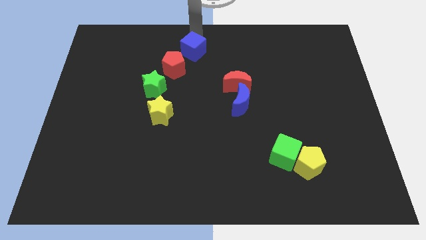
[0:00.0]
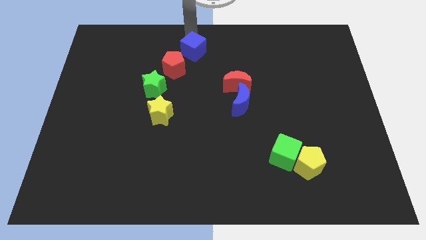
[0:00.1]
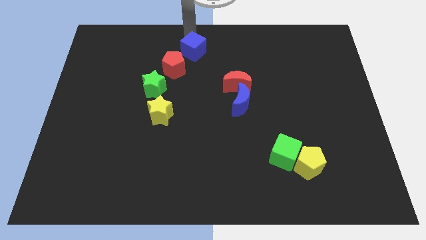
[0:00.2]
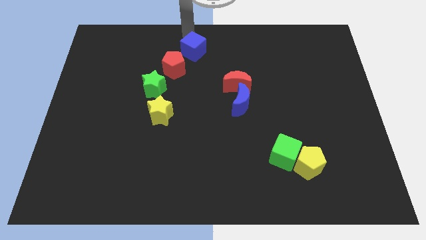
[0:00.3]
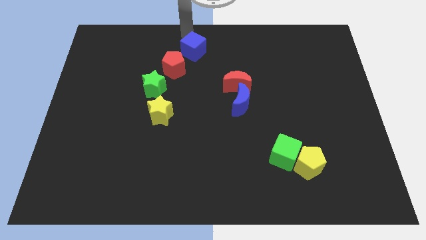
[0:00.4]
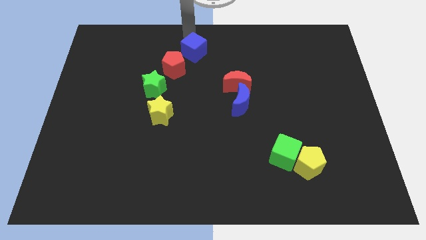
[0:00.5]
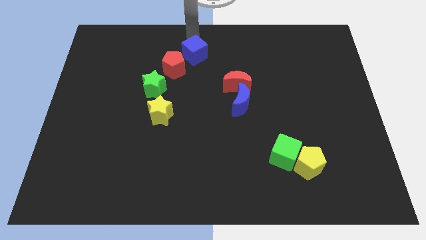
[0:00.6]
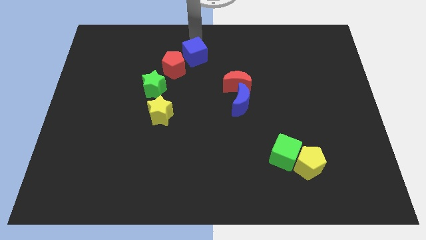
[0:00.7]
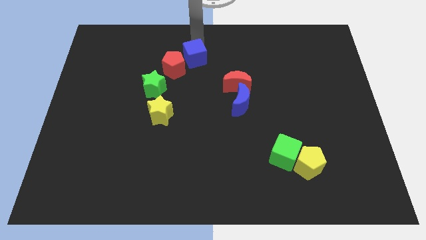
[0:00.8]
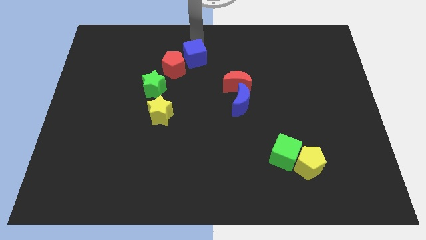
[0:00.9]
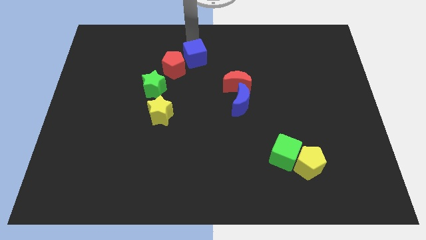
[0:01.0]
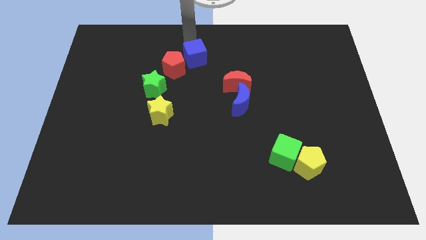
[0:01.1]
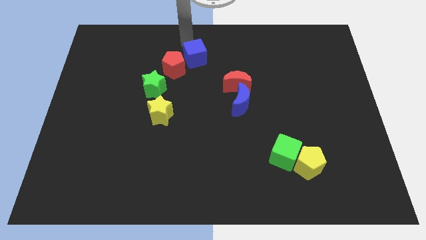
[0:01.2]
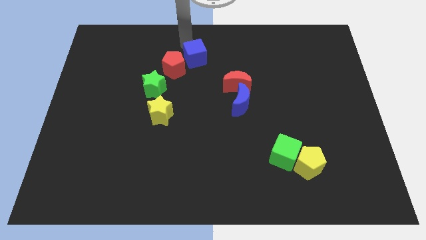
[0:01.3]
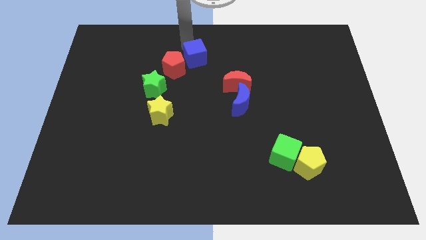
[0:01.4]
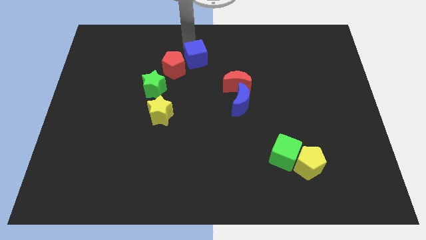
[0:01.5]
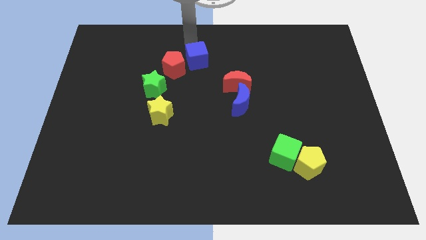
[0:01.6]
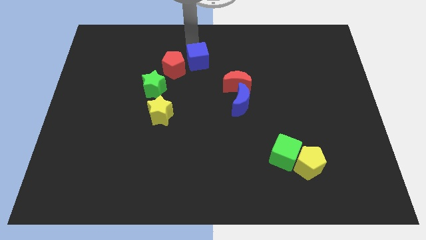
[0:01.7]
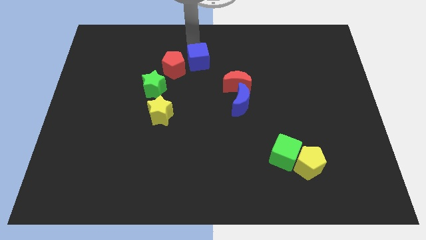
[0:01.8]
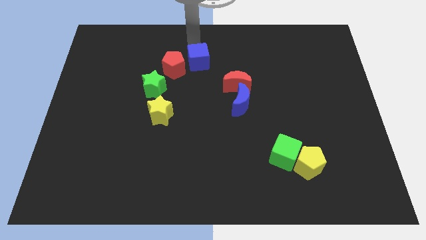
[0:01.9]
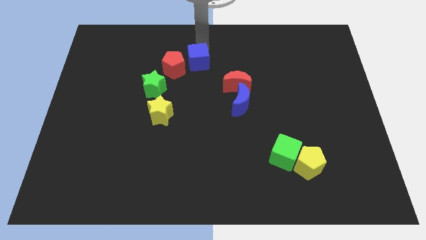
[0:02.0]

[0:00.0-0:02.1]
slightly move the blue cube to the down

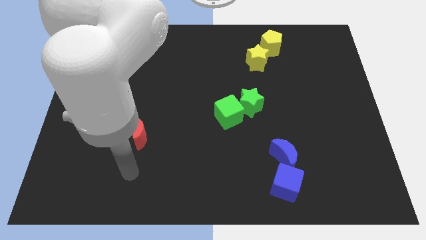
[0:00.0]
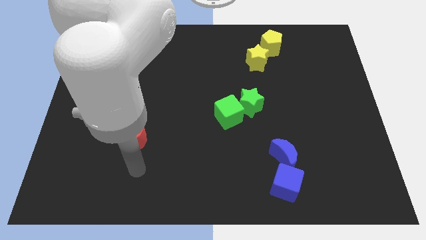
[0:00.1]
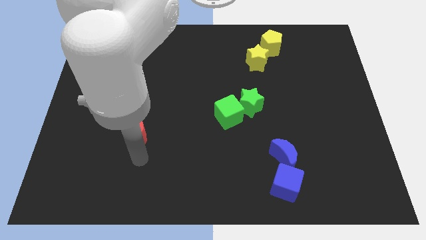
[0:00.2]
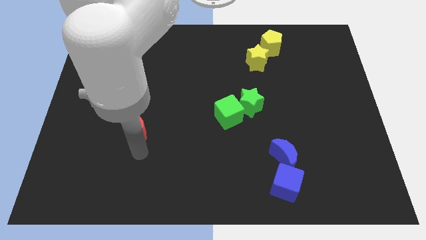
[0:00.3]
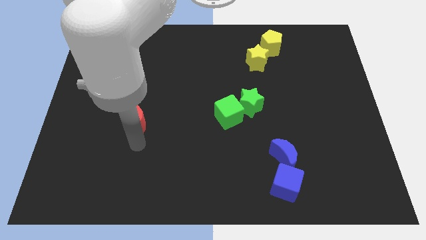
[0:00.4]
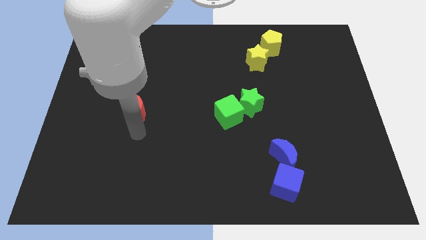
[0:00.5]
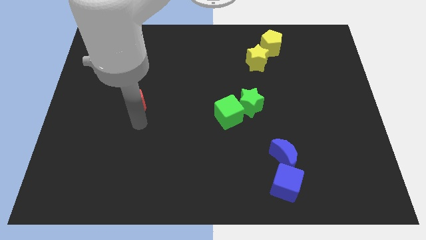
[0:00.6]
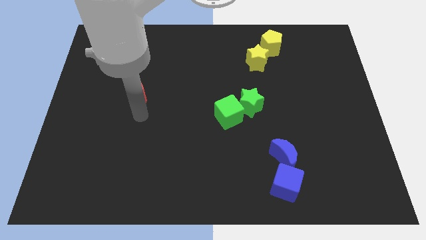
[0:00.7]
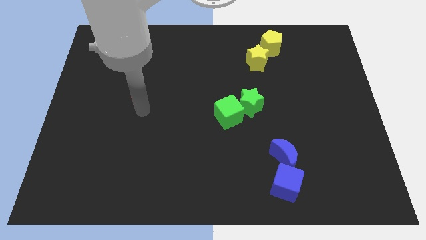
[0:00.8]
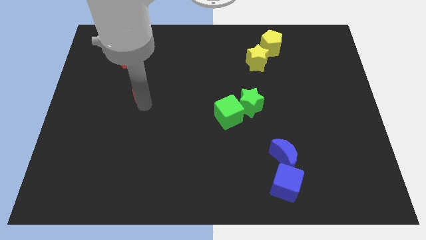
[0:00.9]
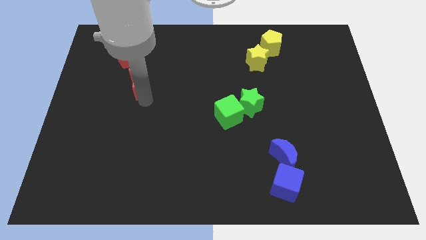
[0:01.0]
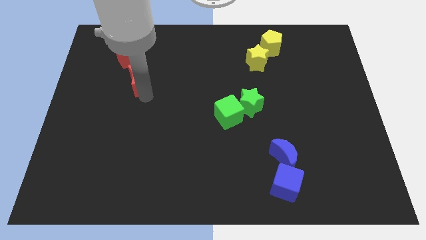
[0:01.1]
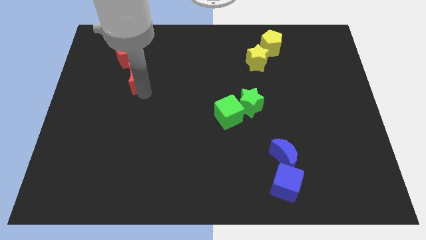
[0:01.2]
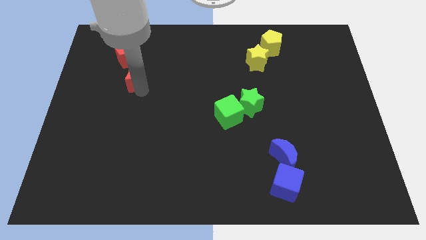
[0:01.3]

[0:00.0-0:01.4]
move the red moon towards the top

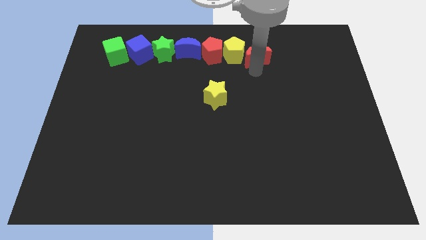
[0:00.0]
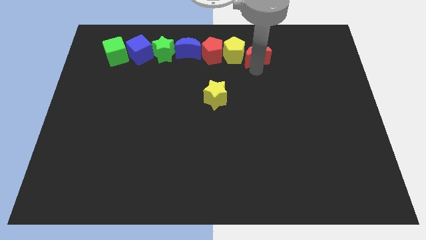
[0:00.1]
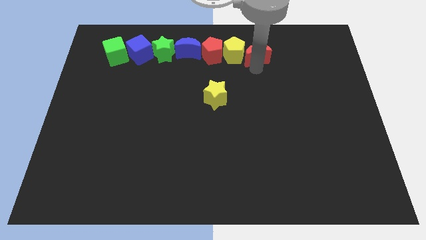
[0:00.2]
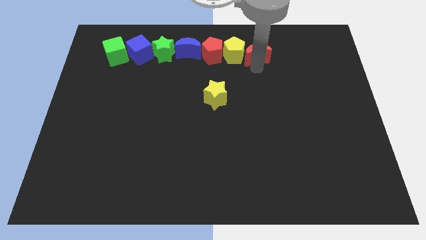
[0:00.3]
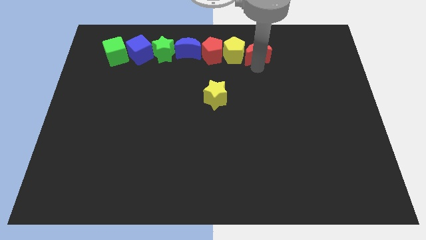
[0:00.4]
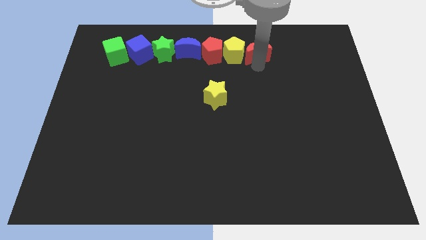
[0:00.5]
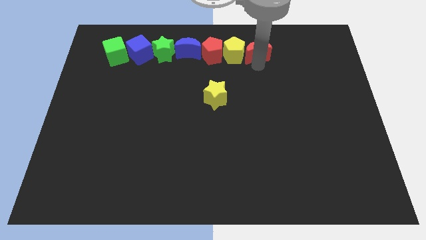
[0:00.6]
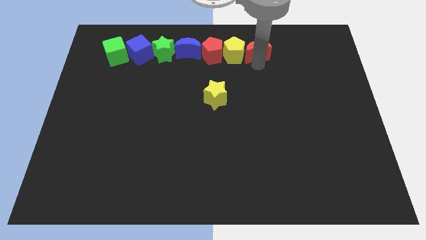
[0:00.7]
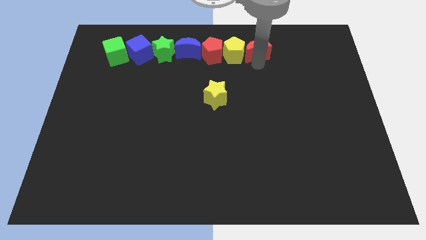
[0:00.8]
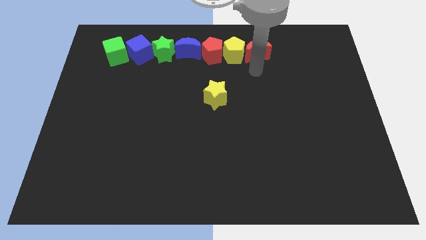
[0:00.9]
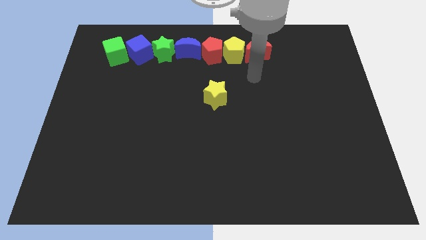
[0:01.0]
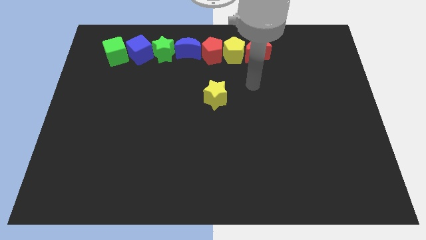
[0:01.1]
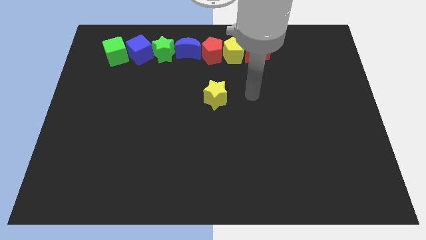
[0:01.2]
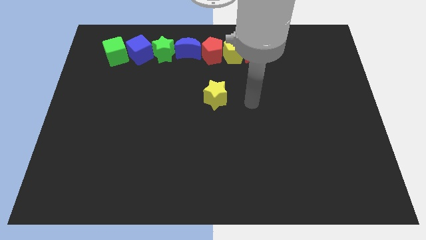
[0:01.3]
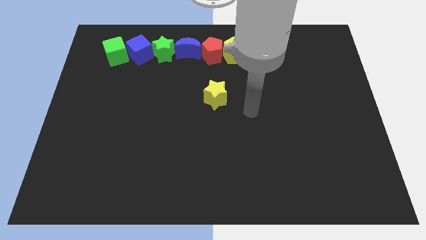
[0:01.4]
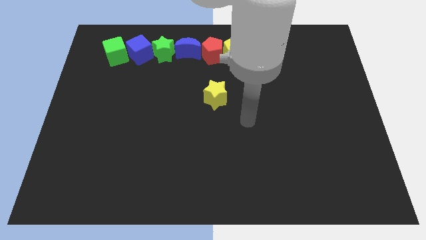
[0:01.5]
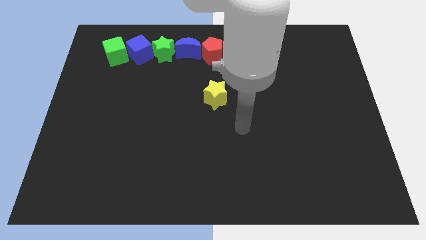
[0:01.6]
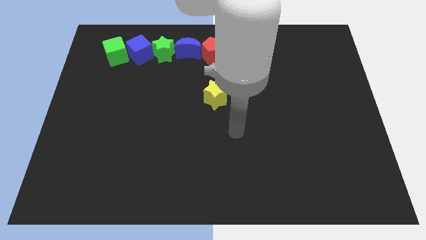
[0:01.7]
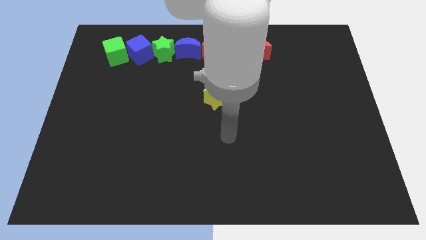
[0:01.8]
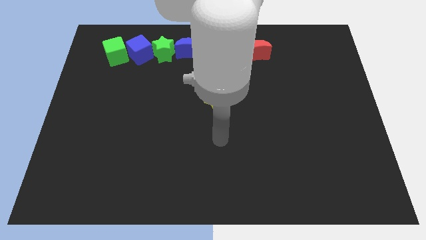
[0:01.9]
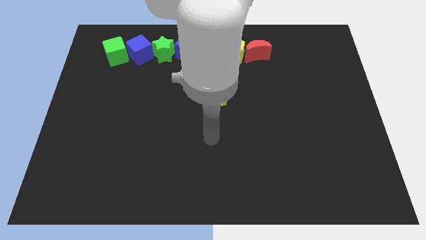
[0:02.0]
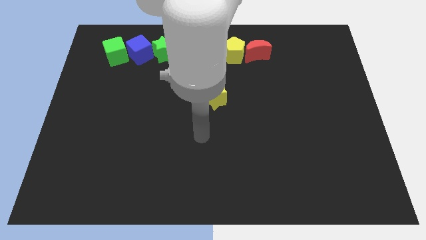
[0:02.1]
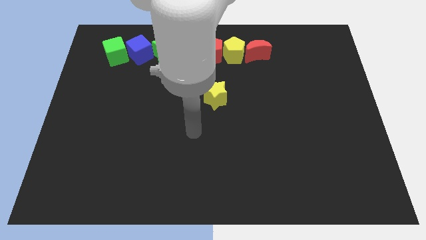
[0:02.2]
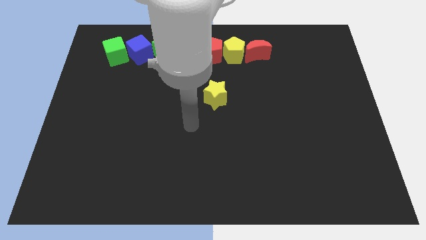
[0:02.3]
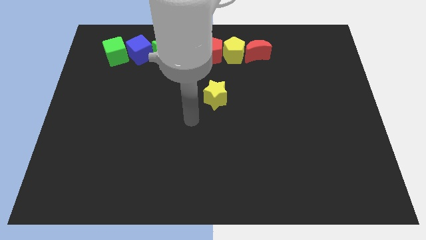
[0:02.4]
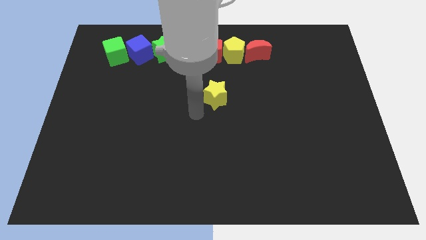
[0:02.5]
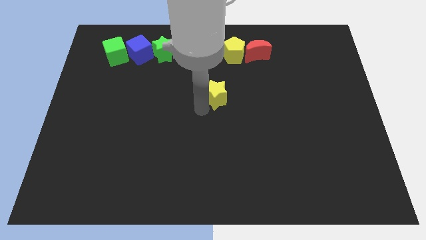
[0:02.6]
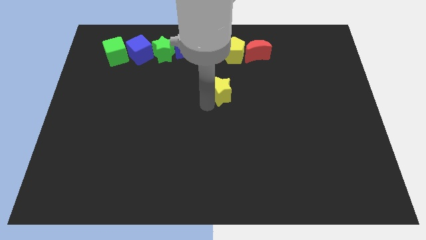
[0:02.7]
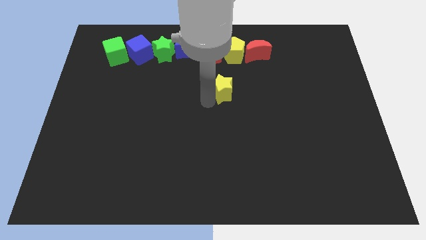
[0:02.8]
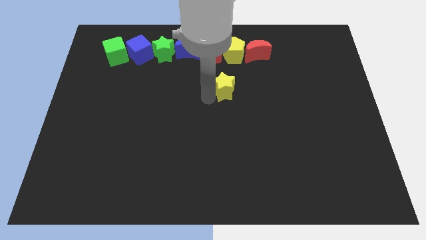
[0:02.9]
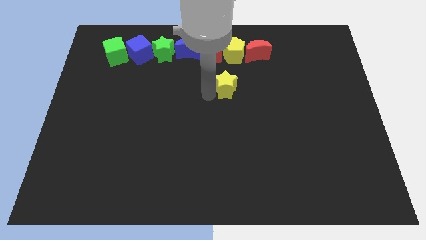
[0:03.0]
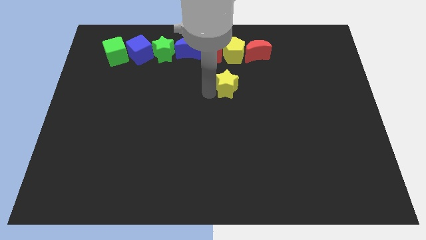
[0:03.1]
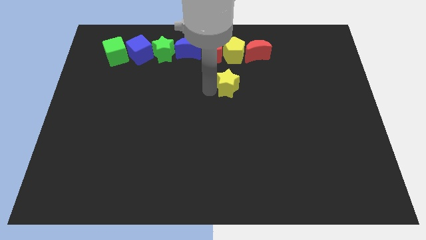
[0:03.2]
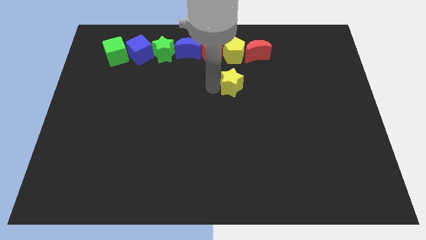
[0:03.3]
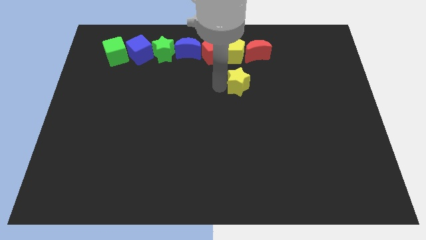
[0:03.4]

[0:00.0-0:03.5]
move yellow star below the yellow pentagon

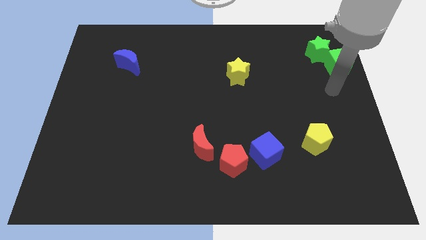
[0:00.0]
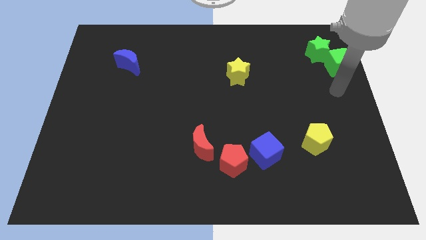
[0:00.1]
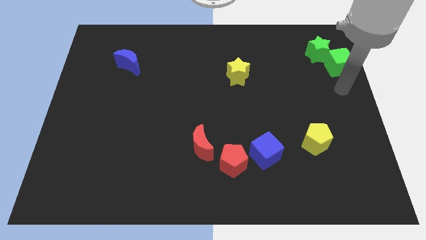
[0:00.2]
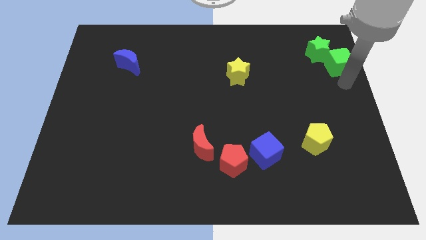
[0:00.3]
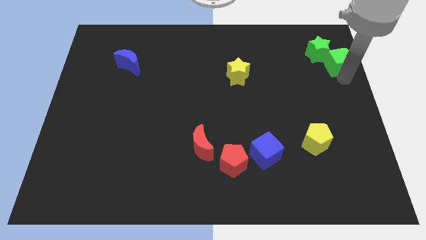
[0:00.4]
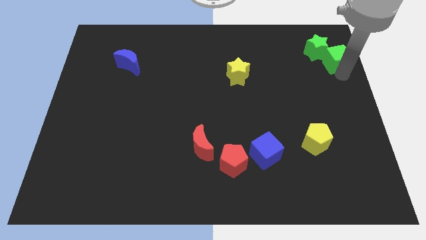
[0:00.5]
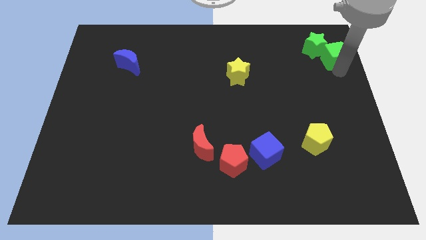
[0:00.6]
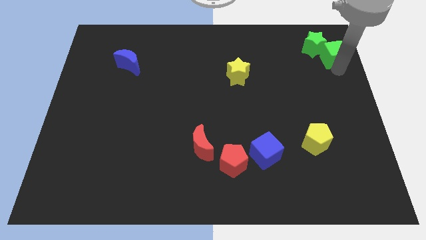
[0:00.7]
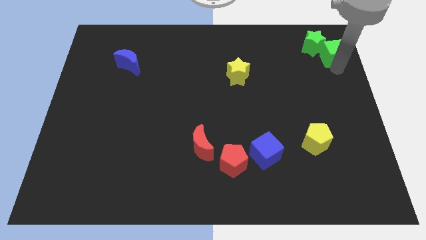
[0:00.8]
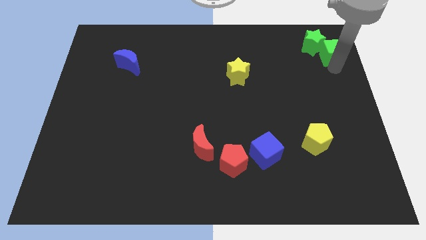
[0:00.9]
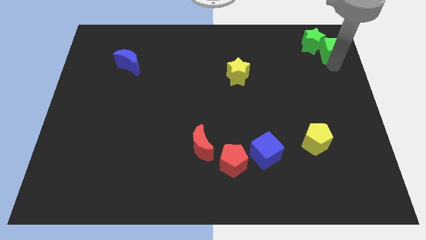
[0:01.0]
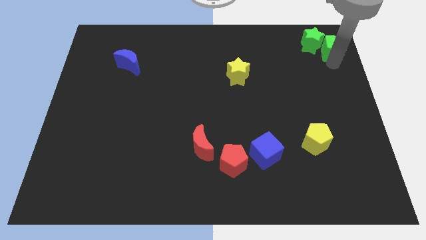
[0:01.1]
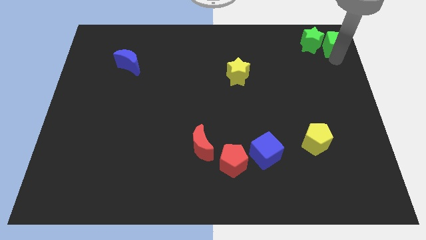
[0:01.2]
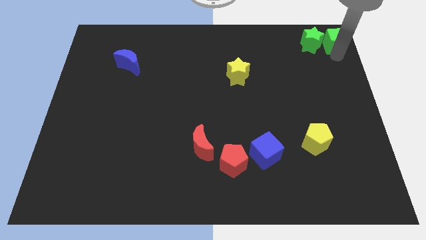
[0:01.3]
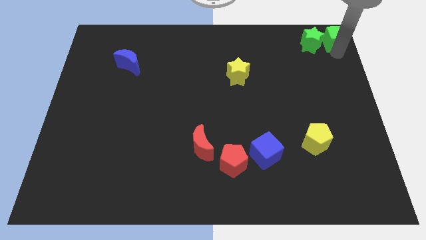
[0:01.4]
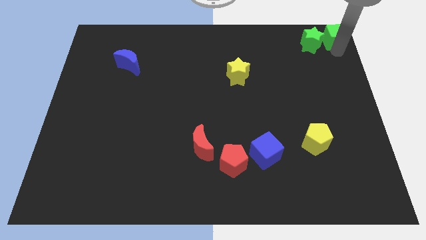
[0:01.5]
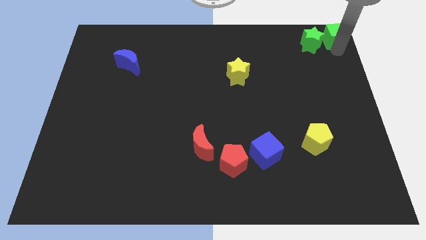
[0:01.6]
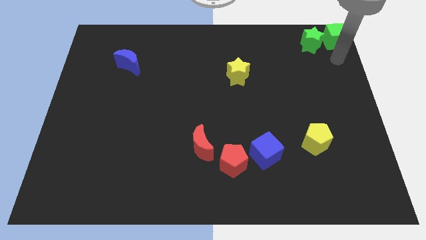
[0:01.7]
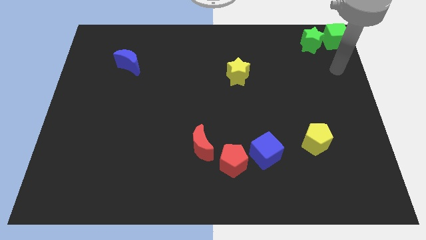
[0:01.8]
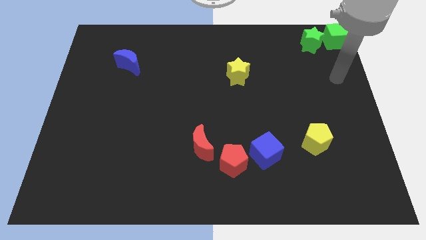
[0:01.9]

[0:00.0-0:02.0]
move the green cube to the top right corner

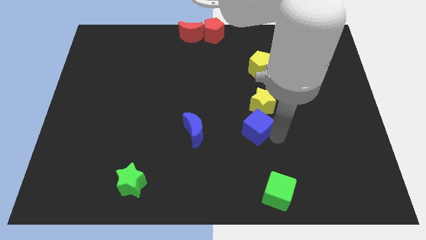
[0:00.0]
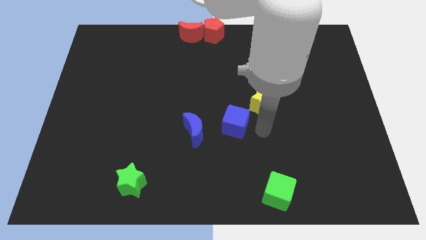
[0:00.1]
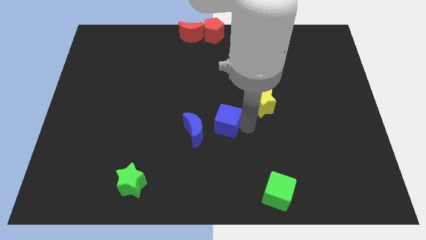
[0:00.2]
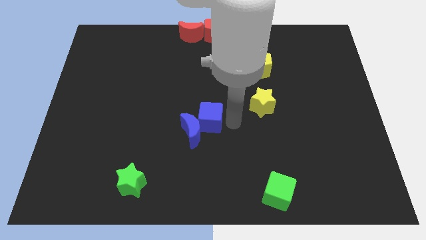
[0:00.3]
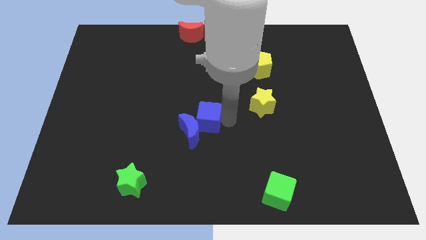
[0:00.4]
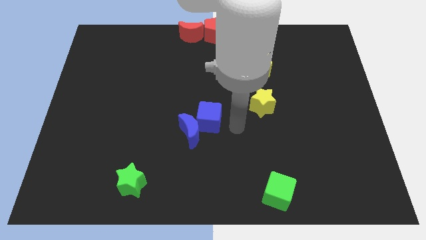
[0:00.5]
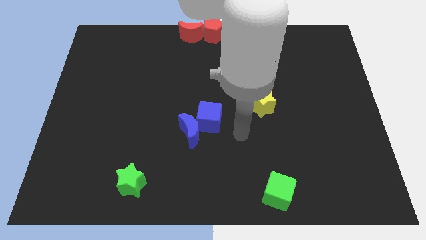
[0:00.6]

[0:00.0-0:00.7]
move the blue cube into the blue crescent
